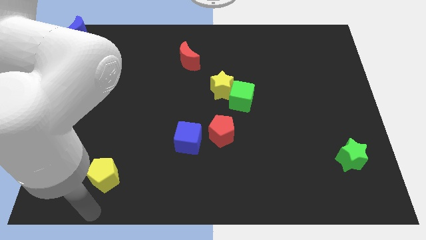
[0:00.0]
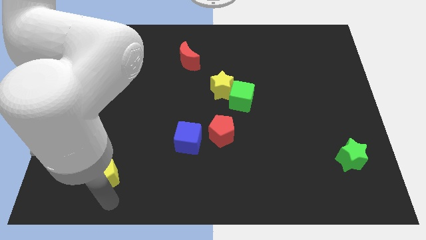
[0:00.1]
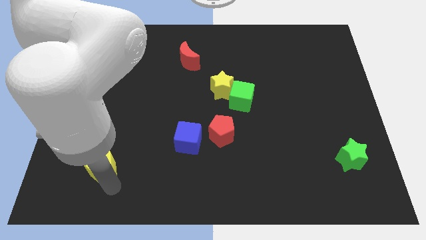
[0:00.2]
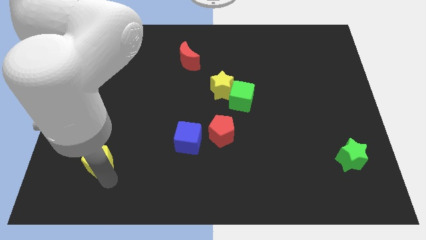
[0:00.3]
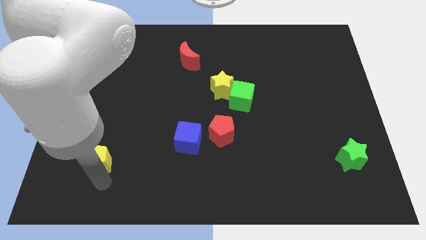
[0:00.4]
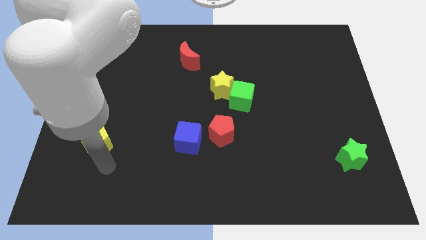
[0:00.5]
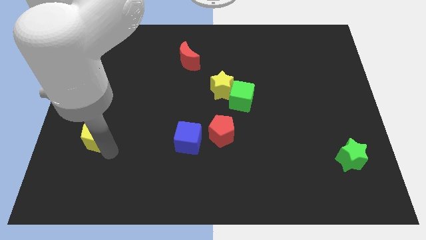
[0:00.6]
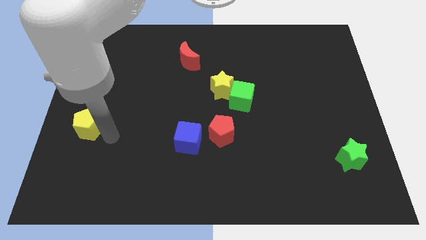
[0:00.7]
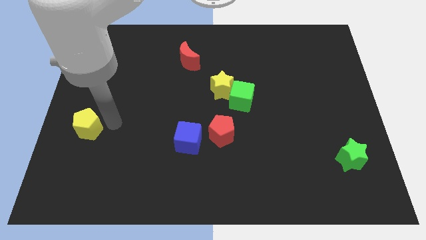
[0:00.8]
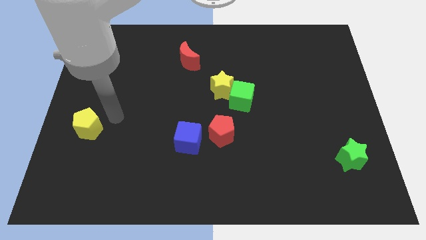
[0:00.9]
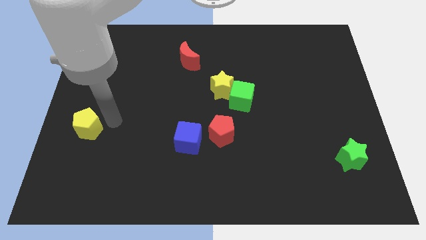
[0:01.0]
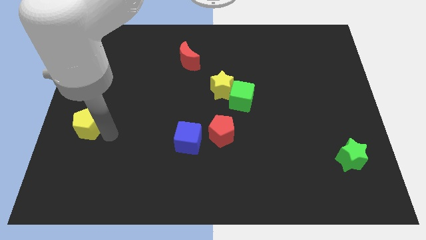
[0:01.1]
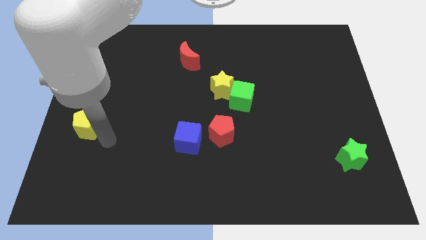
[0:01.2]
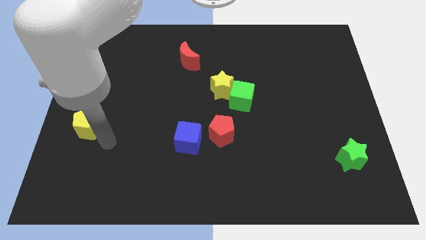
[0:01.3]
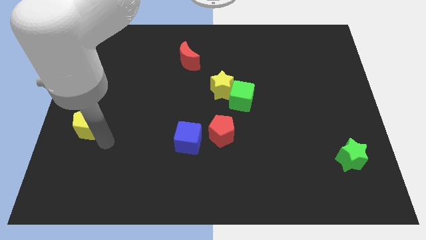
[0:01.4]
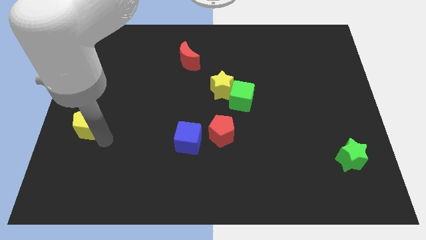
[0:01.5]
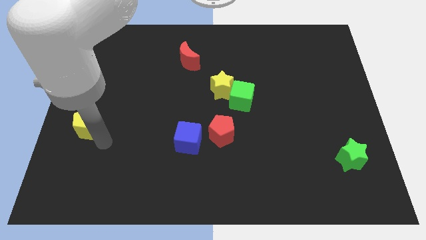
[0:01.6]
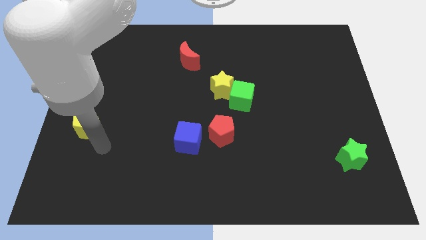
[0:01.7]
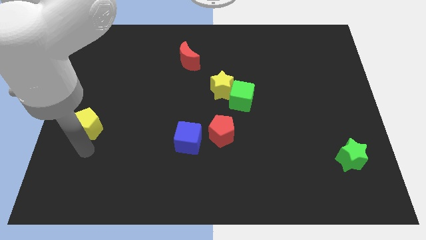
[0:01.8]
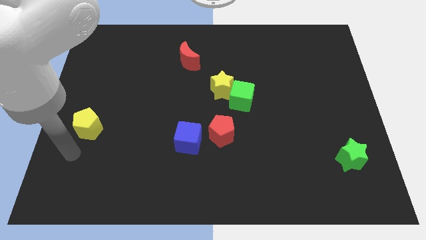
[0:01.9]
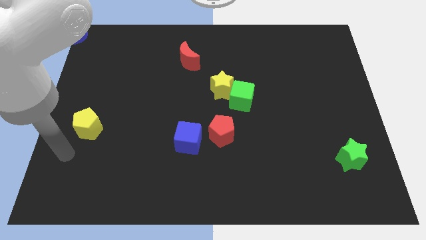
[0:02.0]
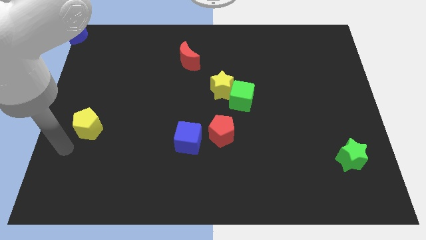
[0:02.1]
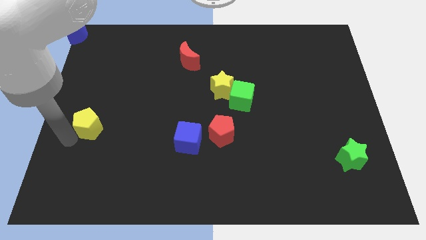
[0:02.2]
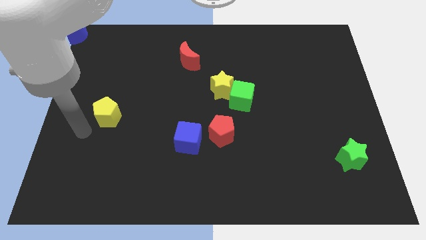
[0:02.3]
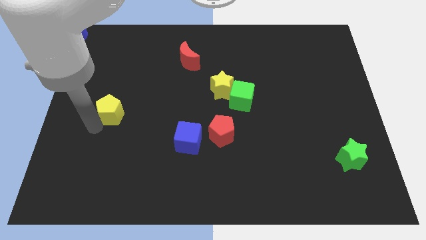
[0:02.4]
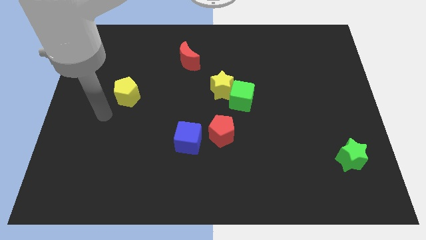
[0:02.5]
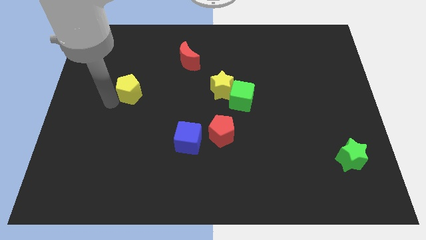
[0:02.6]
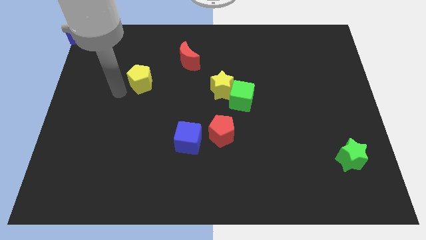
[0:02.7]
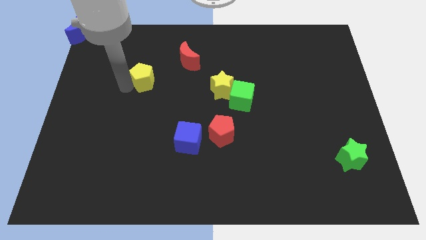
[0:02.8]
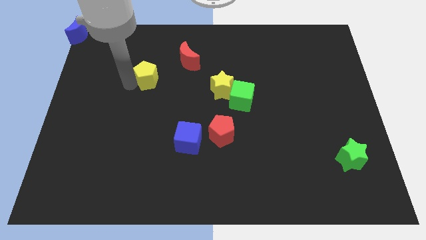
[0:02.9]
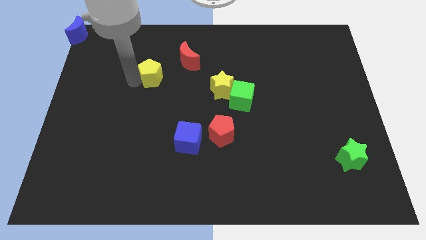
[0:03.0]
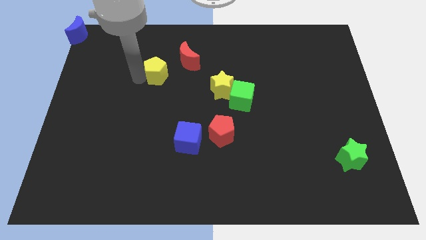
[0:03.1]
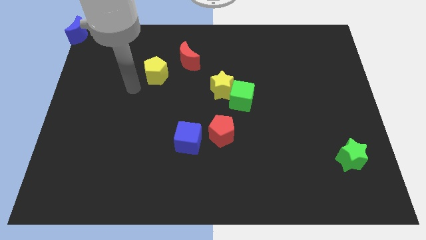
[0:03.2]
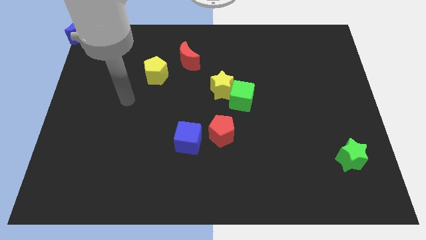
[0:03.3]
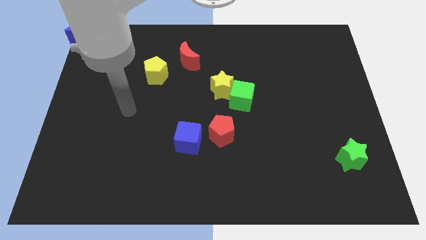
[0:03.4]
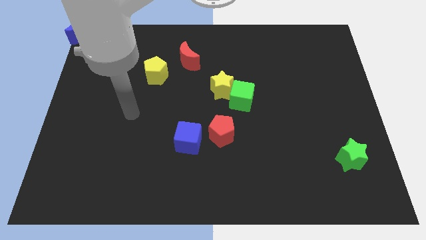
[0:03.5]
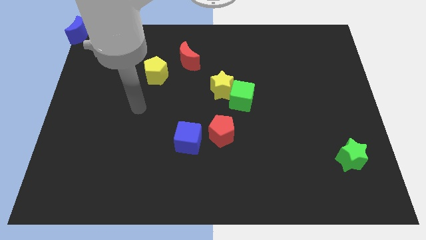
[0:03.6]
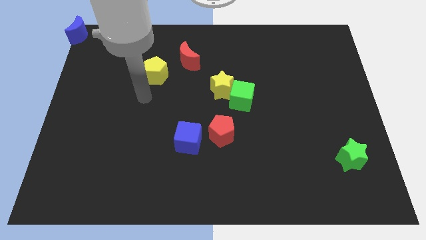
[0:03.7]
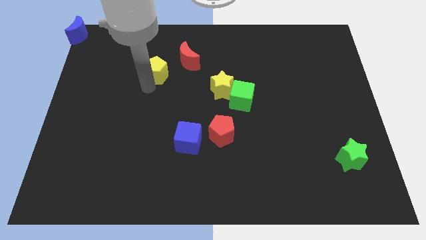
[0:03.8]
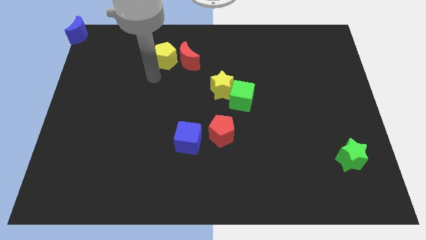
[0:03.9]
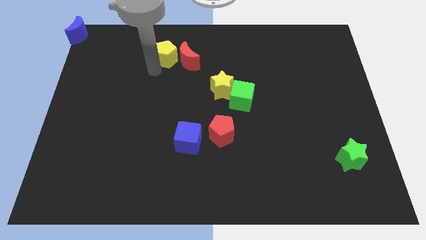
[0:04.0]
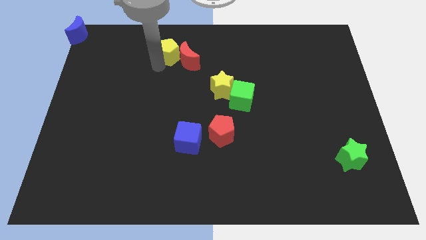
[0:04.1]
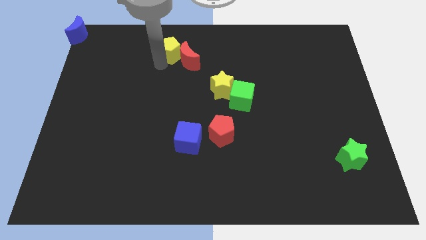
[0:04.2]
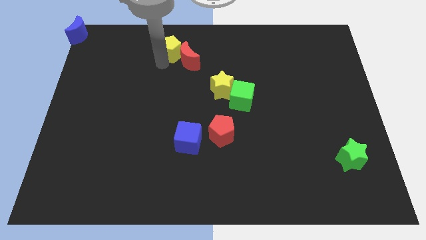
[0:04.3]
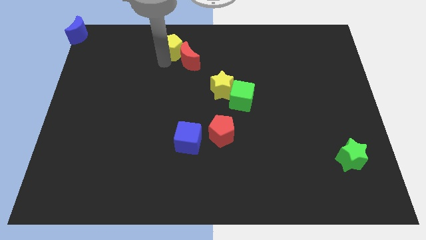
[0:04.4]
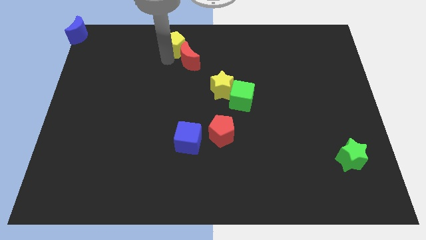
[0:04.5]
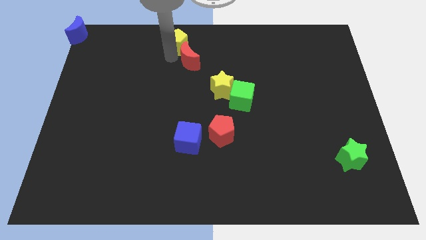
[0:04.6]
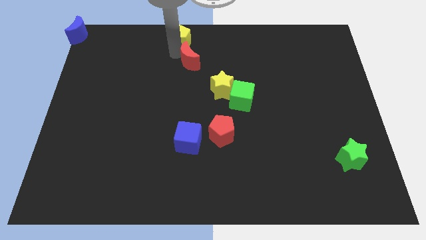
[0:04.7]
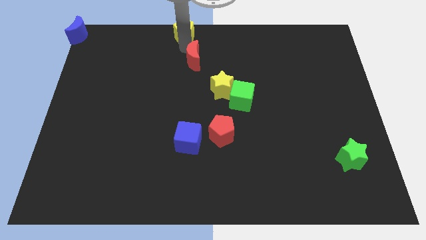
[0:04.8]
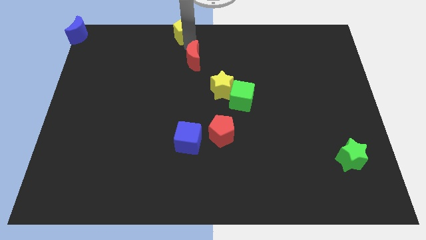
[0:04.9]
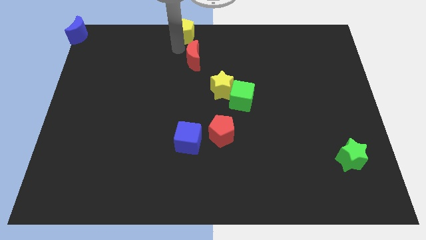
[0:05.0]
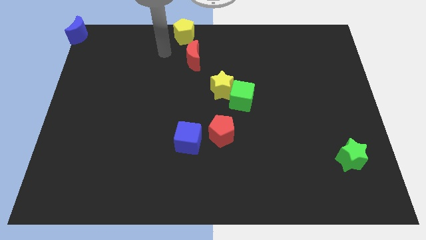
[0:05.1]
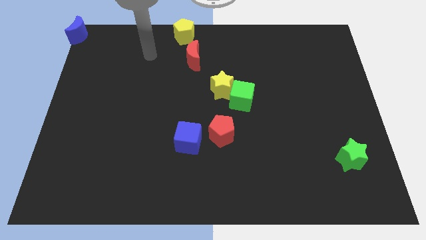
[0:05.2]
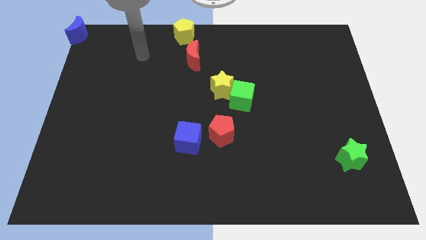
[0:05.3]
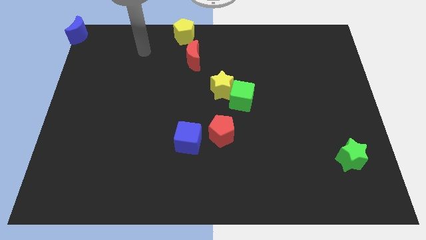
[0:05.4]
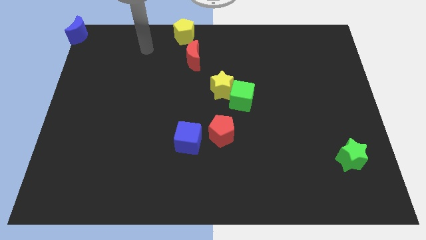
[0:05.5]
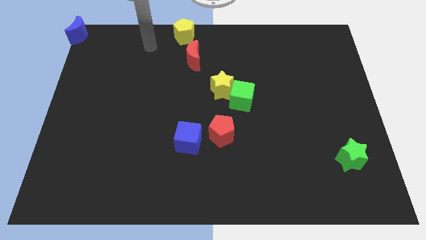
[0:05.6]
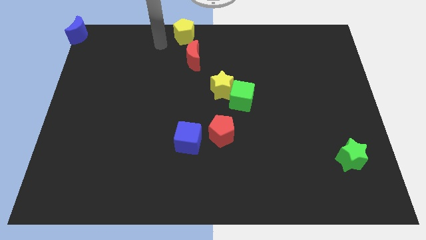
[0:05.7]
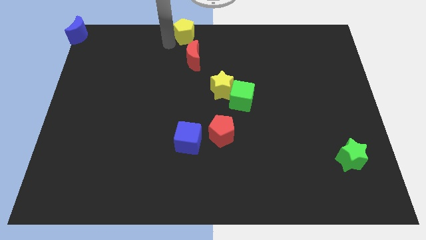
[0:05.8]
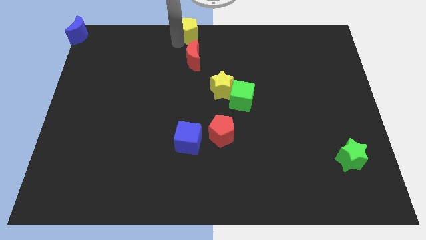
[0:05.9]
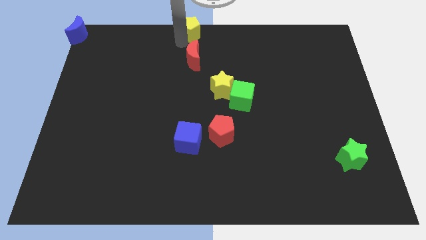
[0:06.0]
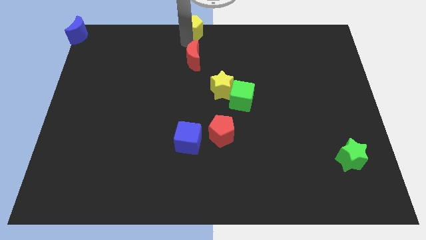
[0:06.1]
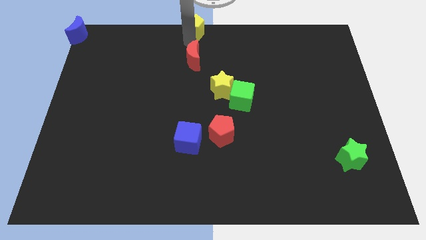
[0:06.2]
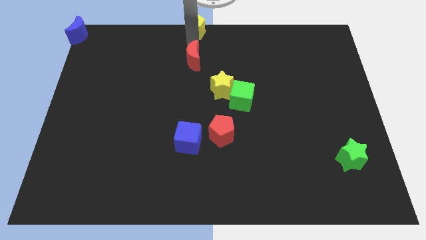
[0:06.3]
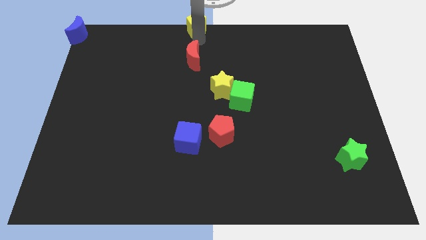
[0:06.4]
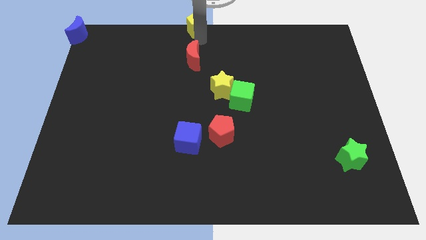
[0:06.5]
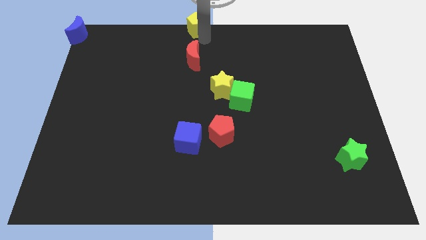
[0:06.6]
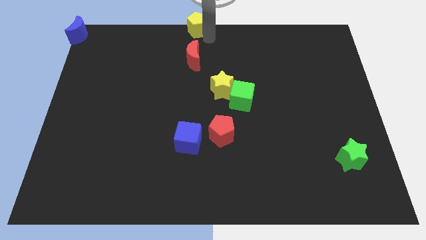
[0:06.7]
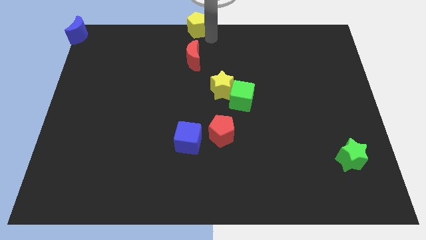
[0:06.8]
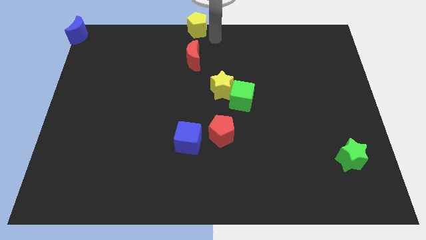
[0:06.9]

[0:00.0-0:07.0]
move the yellow pentagon to the top center

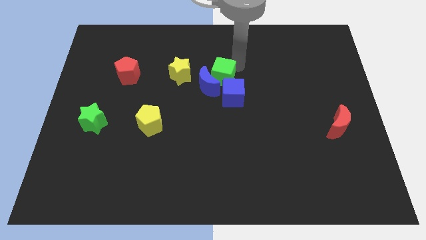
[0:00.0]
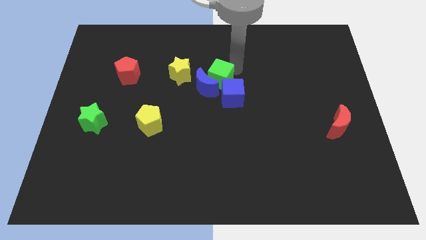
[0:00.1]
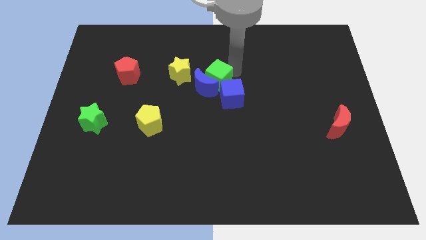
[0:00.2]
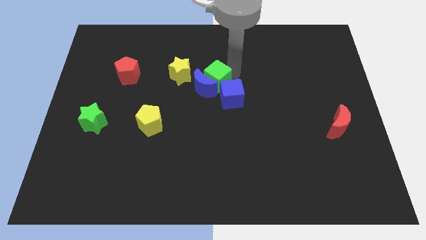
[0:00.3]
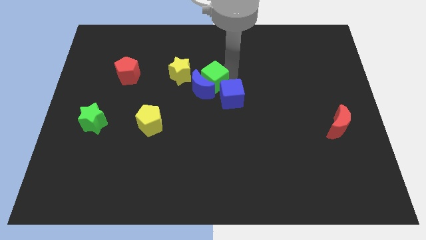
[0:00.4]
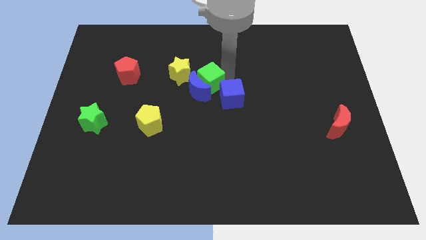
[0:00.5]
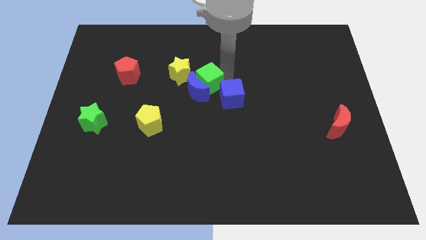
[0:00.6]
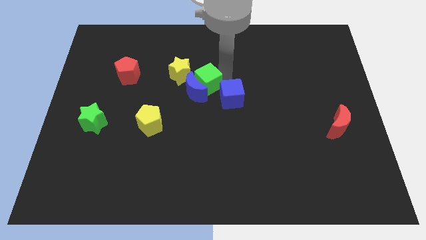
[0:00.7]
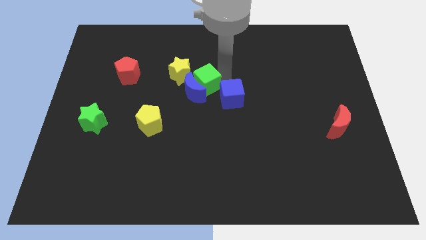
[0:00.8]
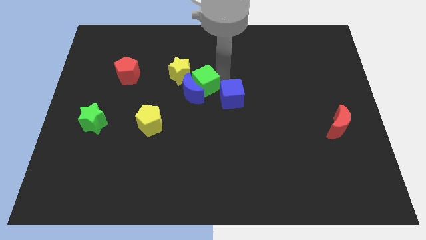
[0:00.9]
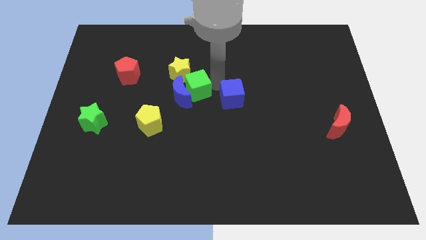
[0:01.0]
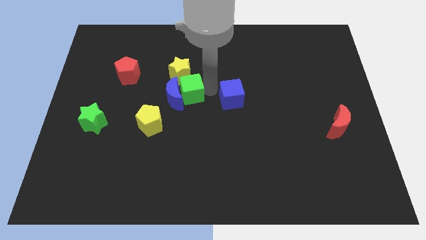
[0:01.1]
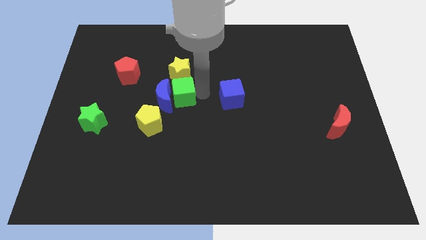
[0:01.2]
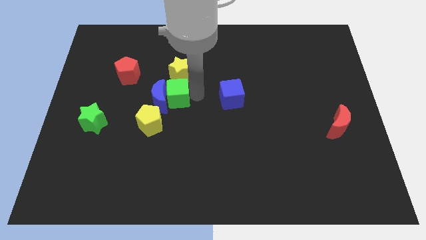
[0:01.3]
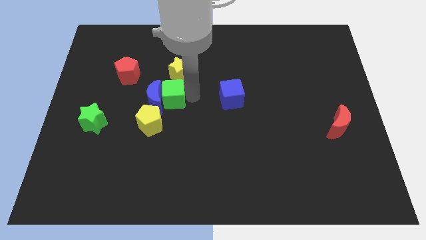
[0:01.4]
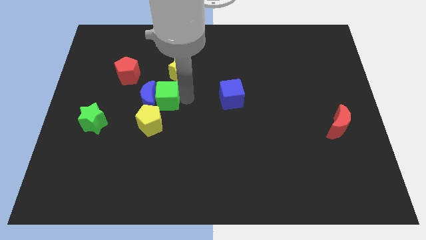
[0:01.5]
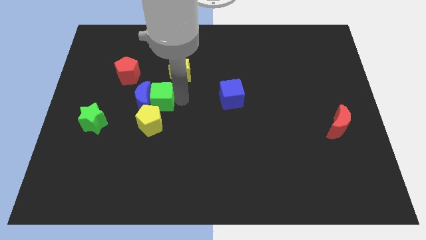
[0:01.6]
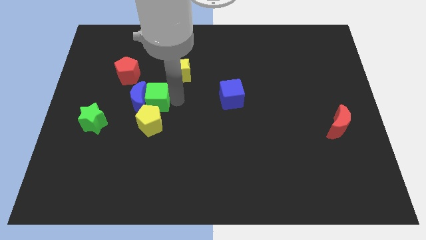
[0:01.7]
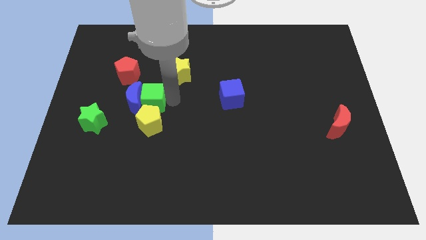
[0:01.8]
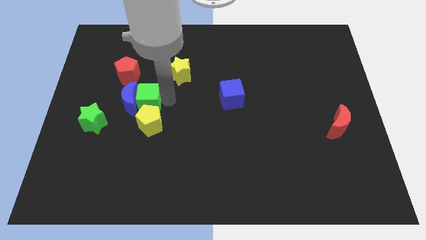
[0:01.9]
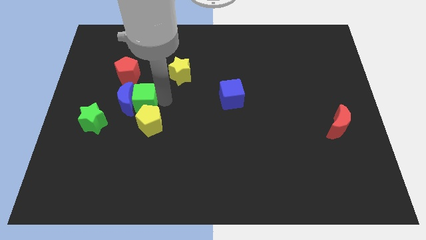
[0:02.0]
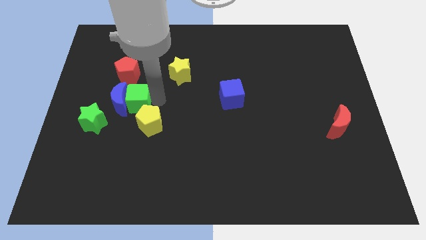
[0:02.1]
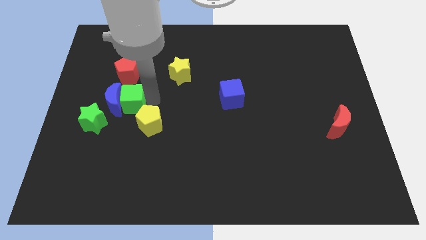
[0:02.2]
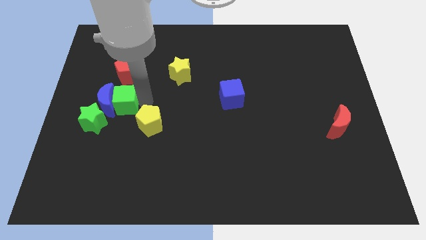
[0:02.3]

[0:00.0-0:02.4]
push green cube and blue crescent towards the center left of the board
